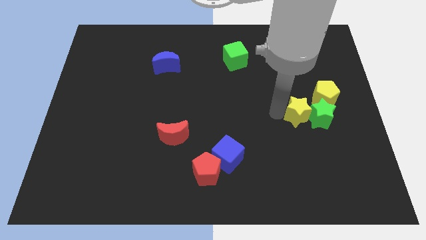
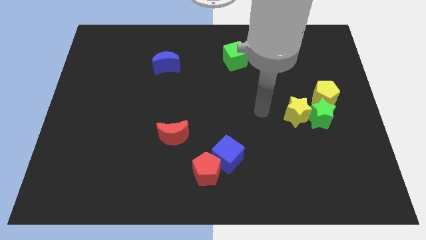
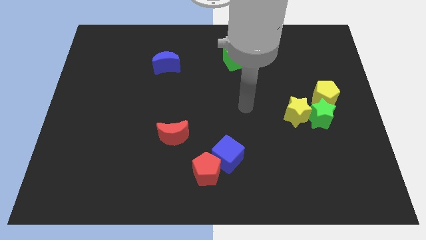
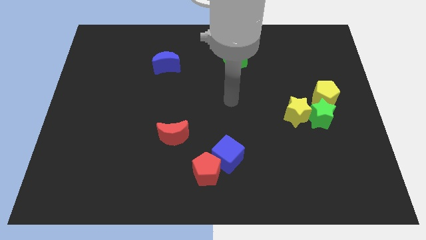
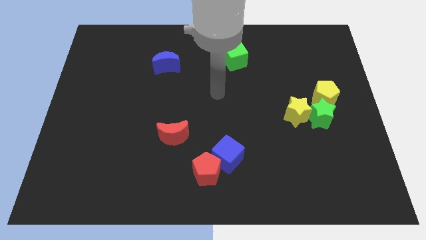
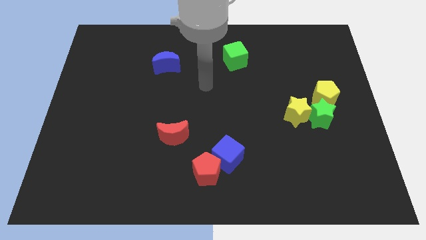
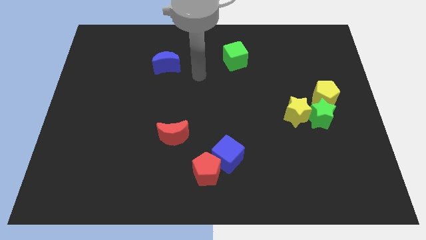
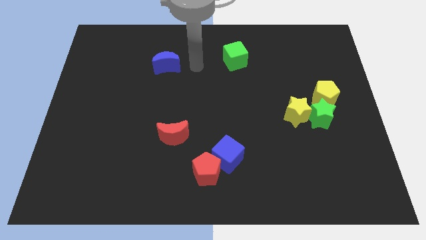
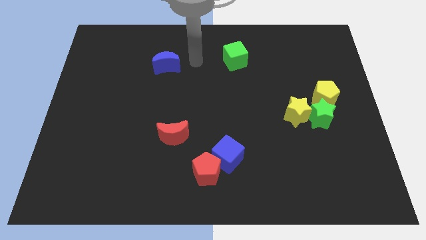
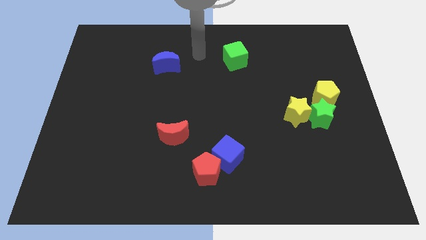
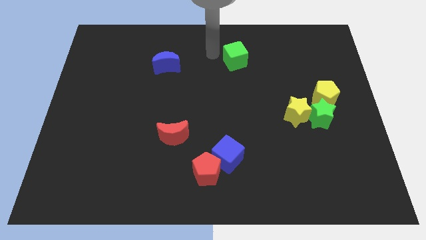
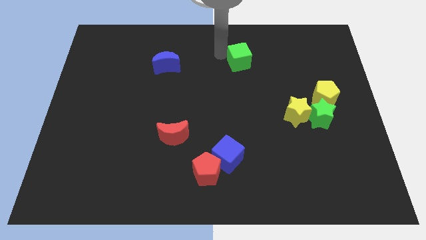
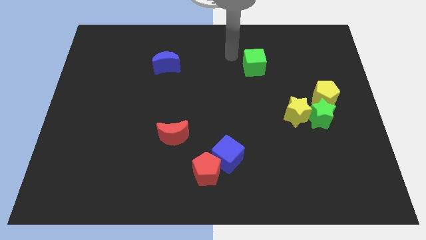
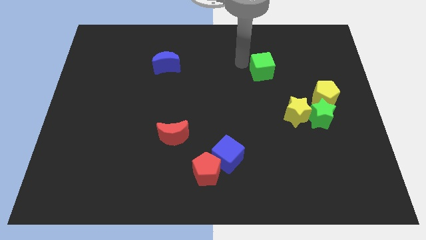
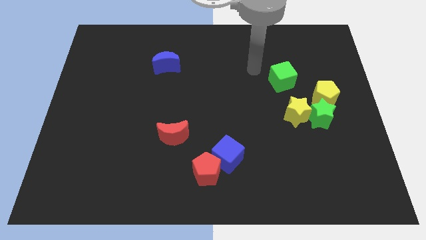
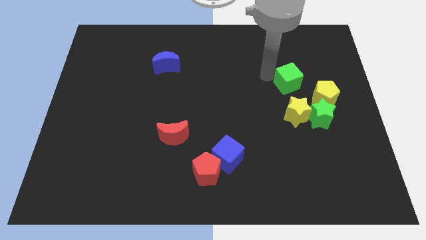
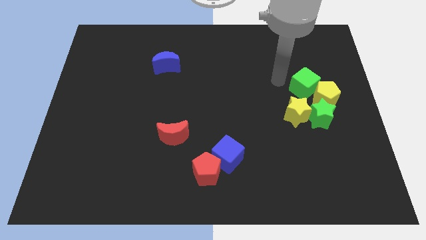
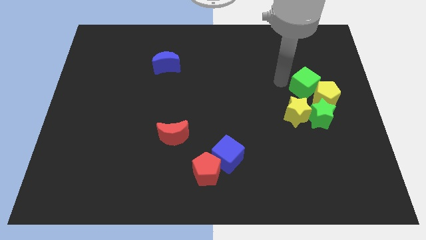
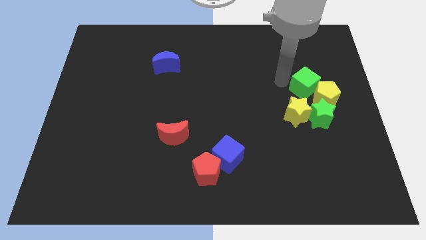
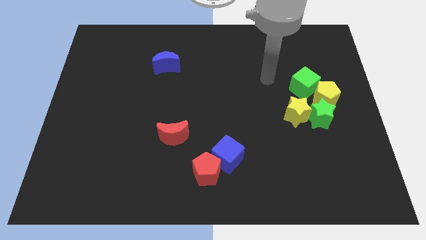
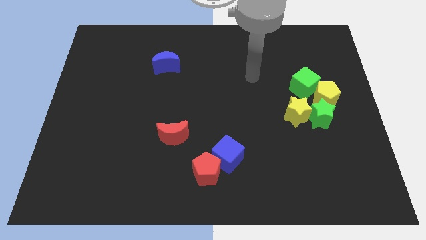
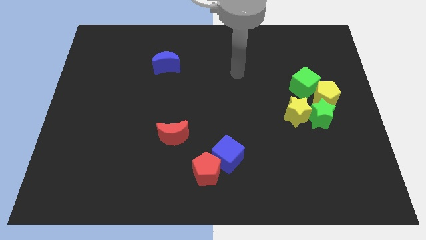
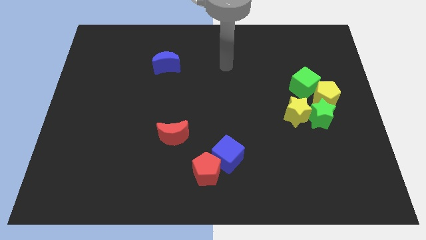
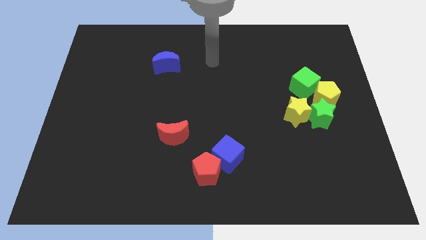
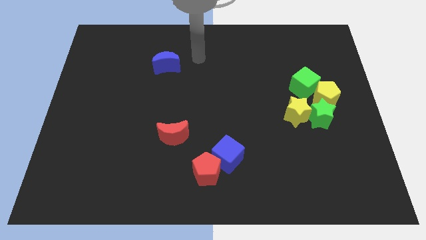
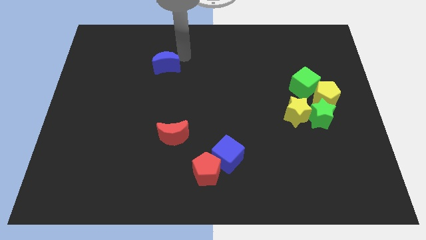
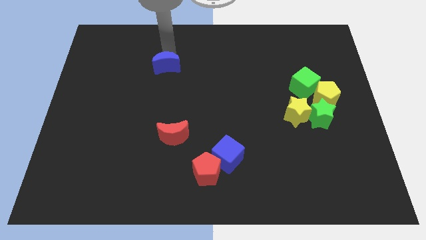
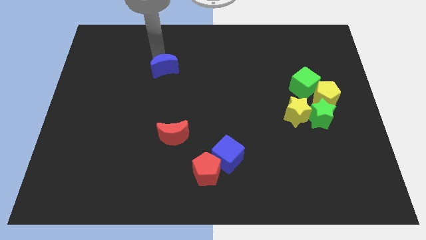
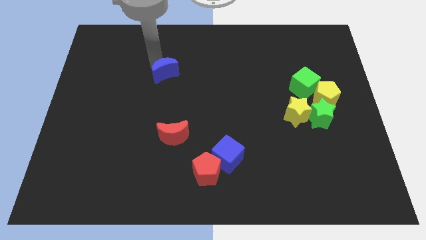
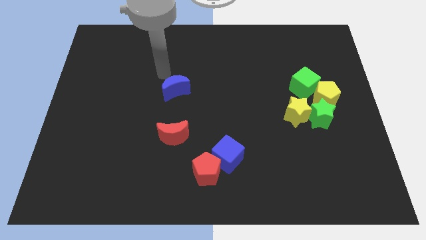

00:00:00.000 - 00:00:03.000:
push the green cube and yellow star to the right center of the board

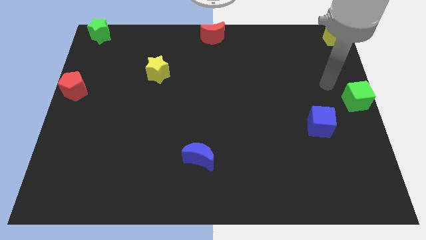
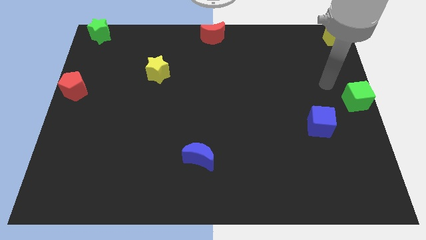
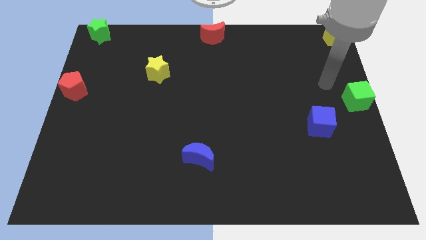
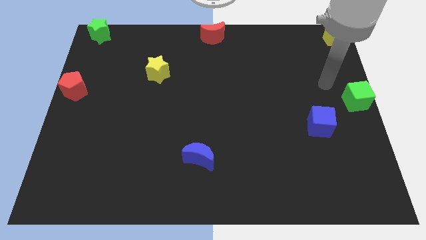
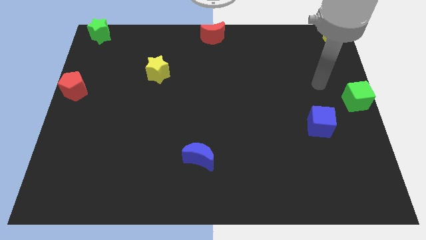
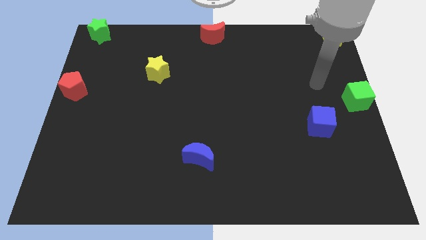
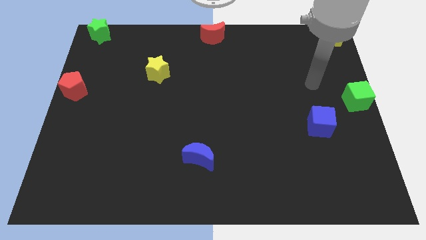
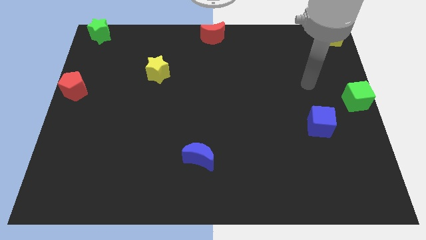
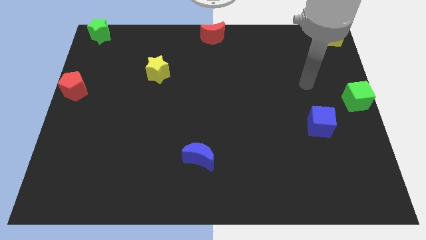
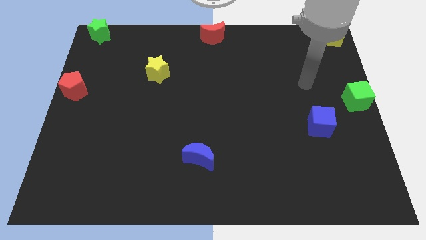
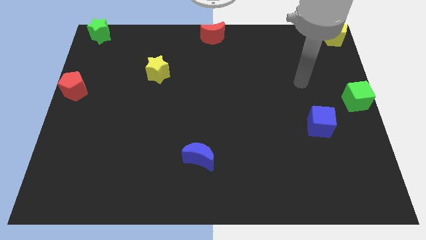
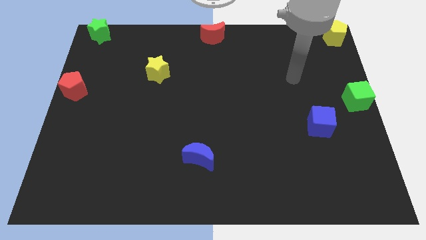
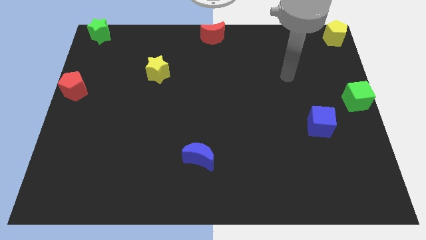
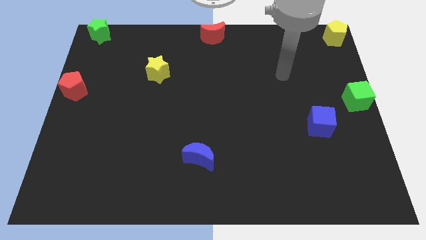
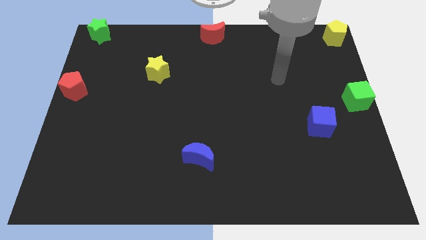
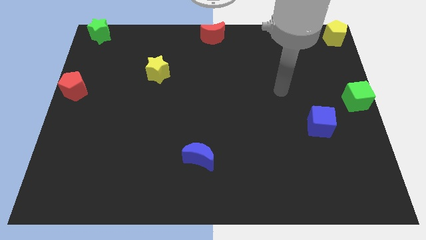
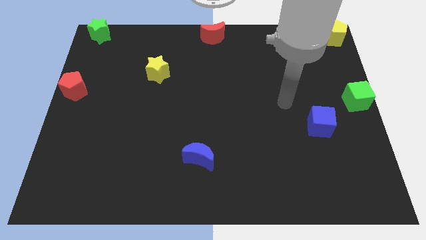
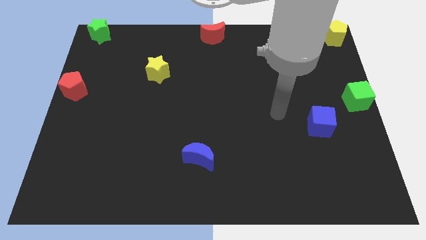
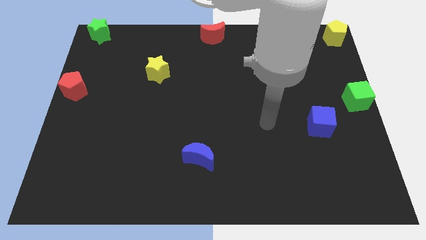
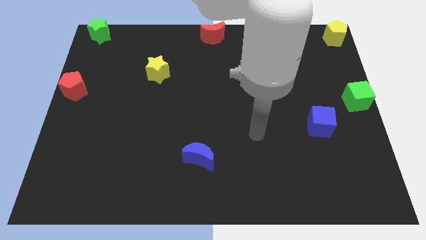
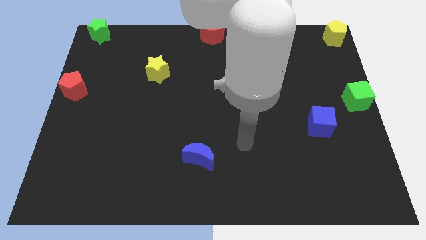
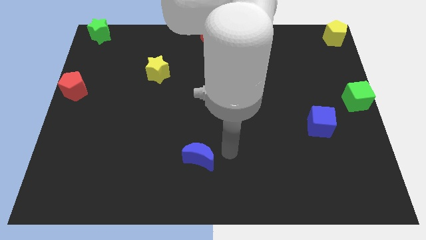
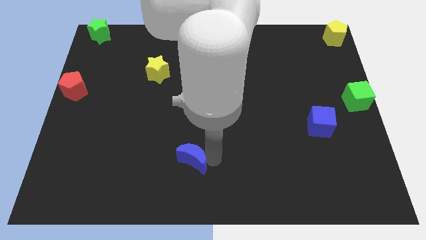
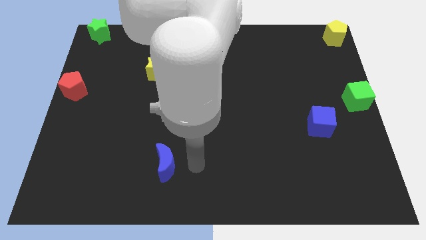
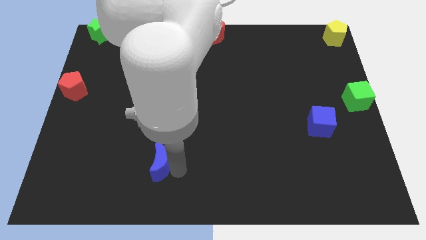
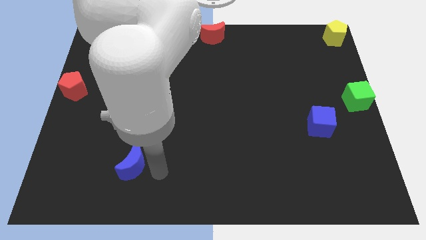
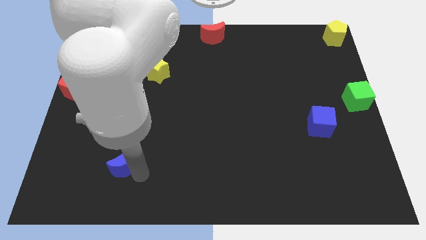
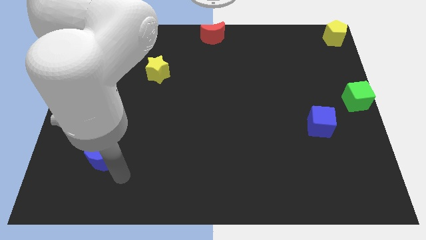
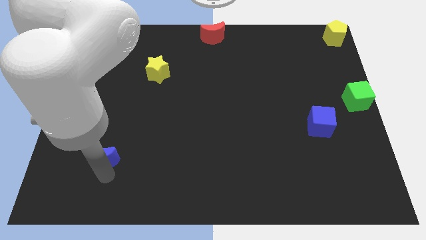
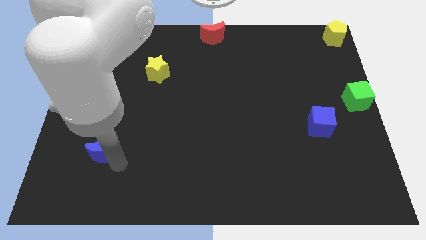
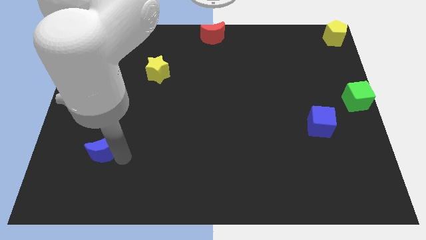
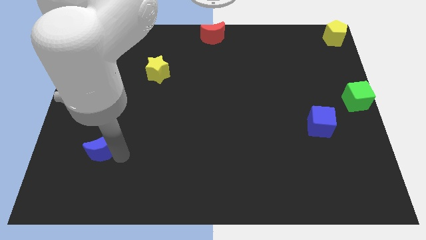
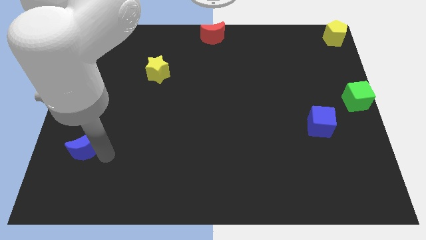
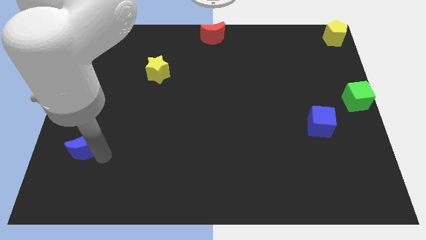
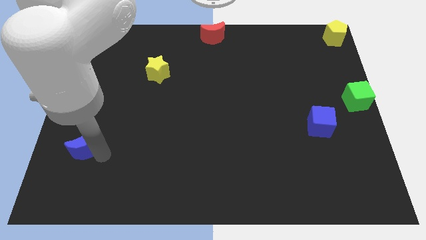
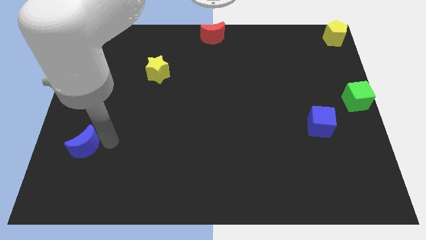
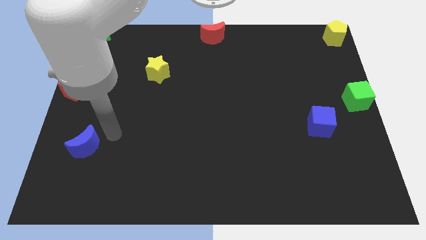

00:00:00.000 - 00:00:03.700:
slide the blue crescent slightly to the left

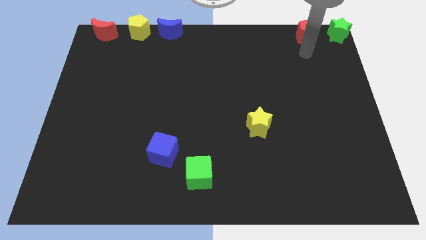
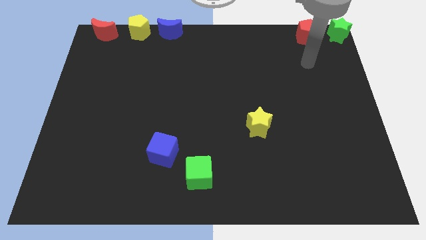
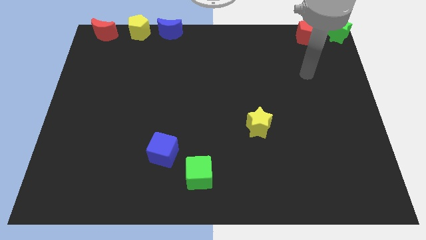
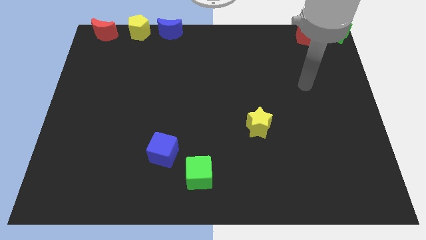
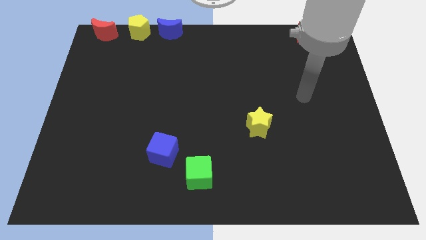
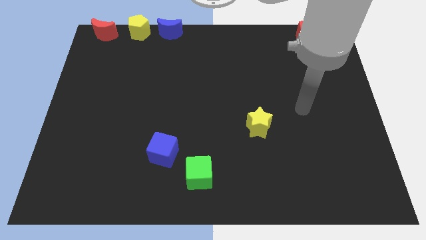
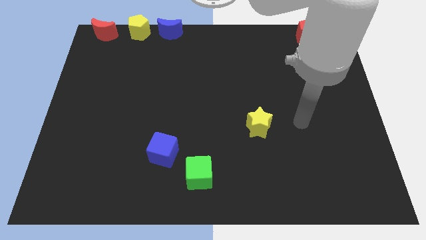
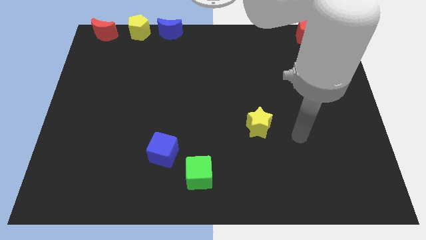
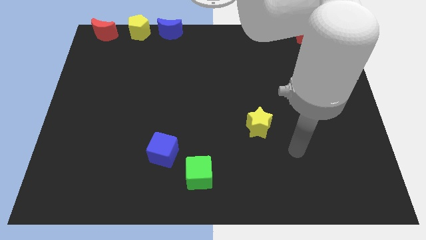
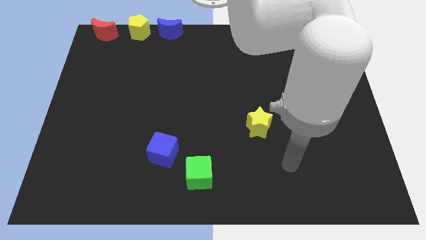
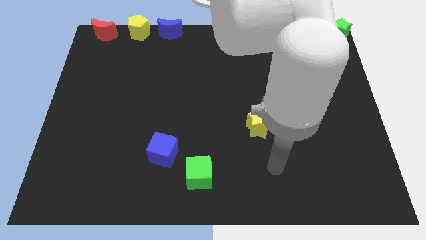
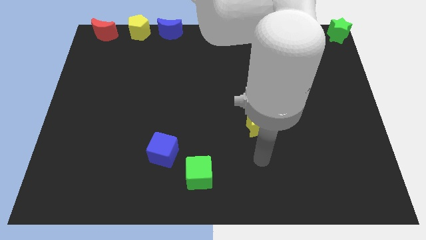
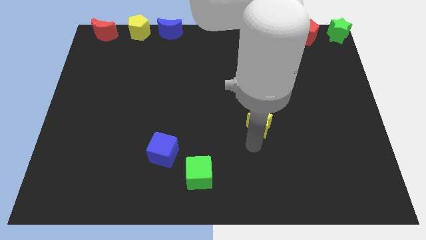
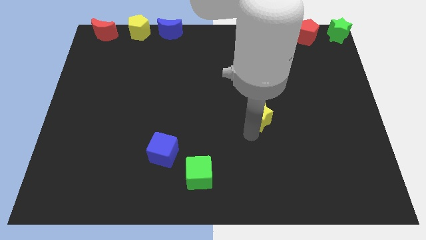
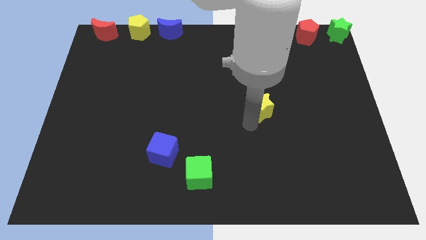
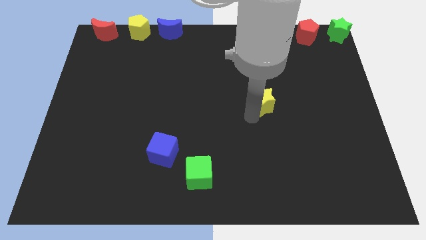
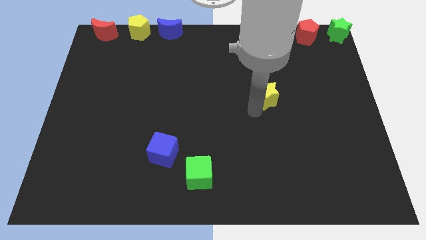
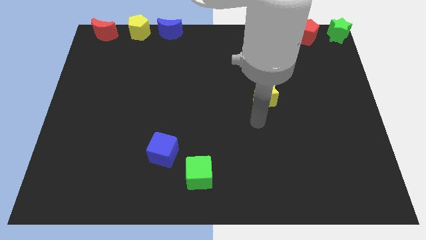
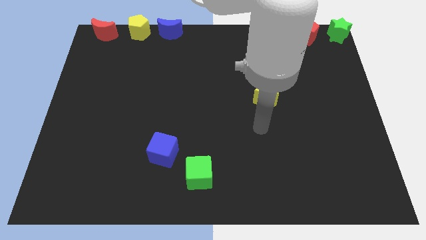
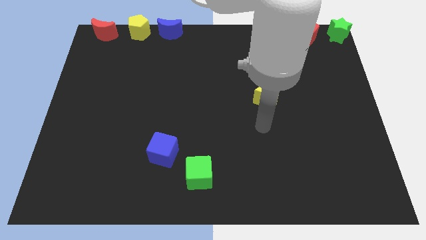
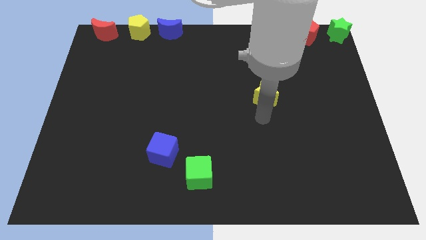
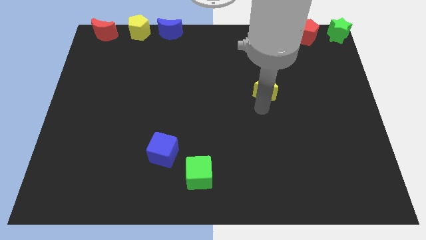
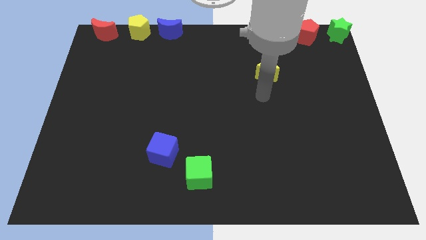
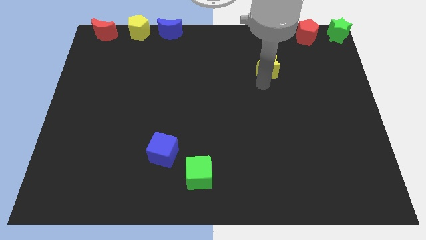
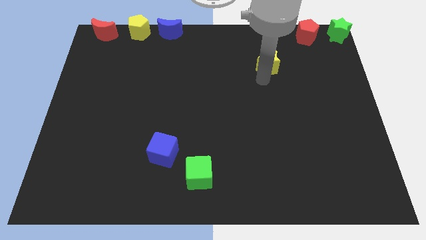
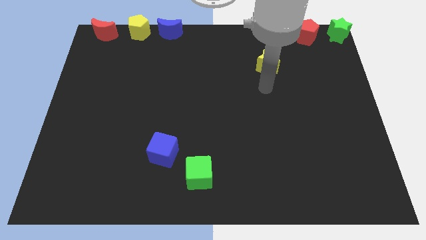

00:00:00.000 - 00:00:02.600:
move yellow star vertically towards top of the board
